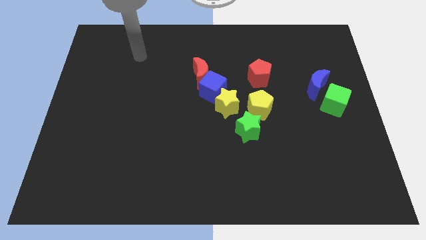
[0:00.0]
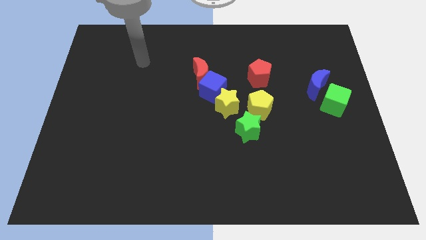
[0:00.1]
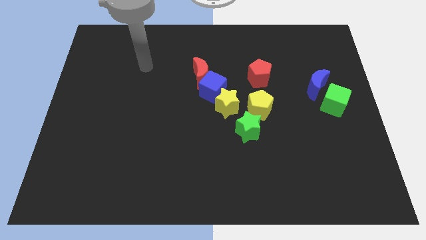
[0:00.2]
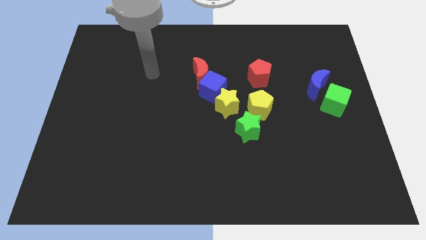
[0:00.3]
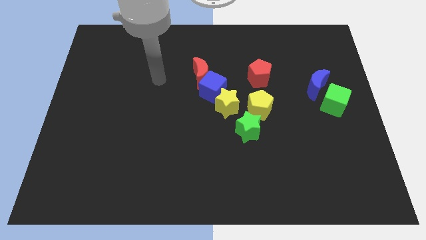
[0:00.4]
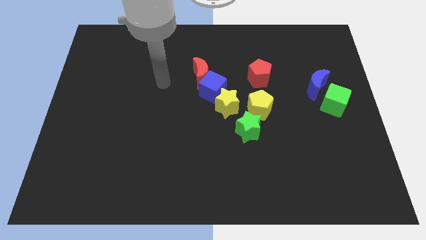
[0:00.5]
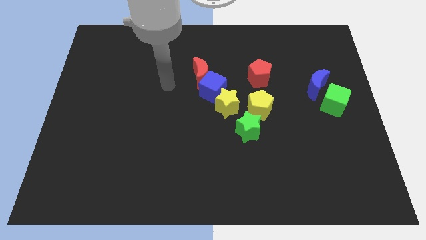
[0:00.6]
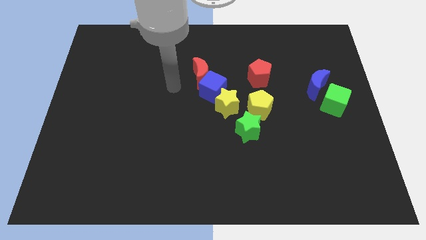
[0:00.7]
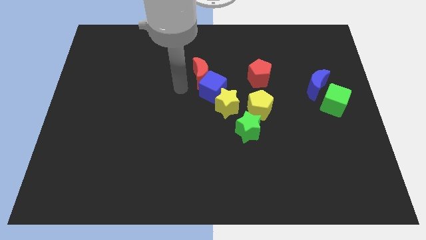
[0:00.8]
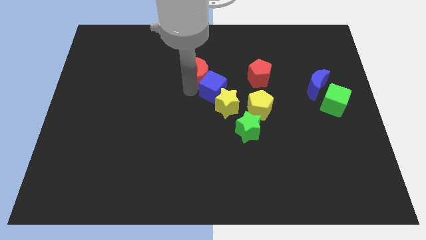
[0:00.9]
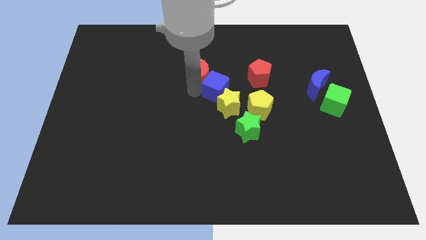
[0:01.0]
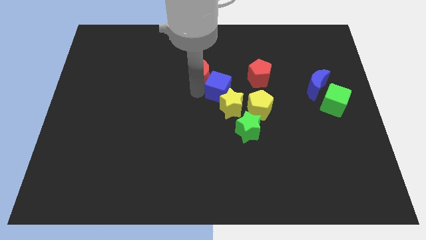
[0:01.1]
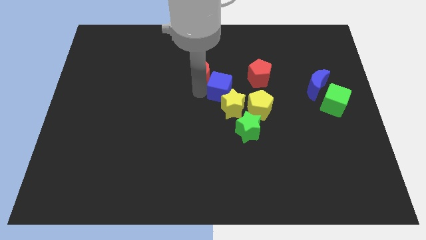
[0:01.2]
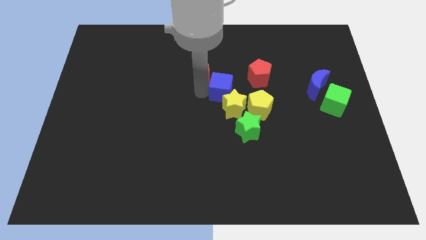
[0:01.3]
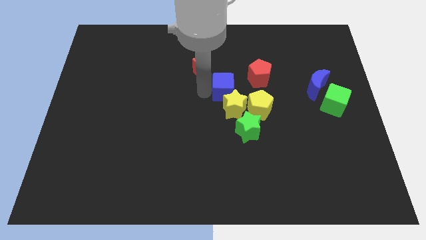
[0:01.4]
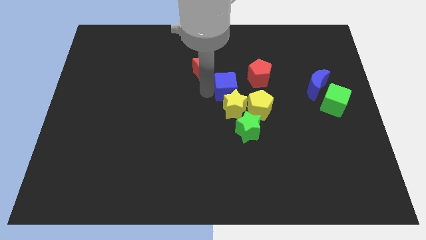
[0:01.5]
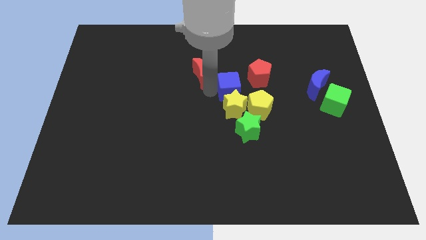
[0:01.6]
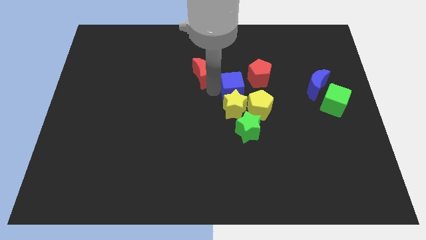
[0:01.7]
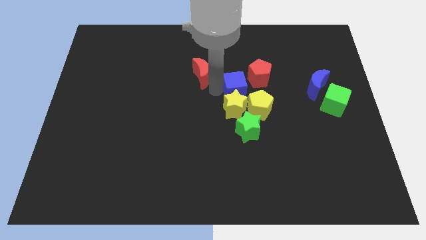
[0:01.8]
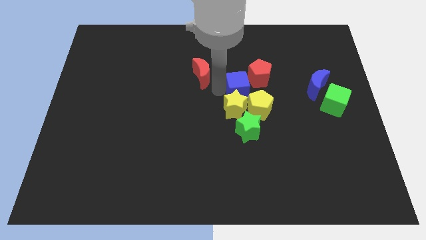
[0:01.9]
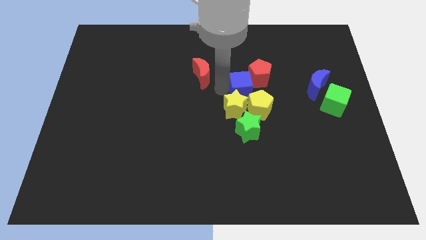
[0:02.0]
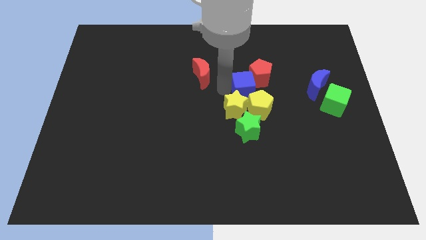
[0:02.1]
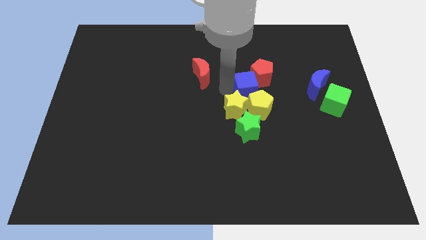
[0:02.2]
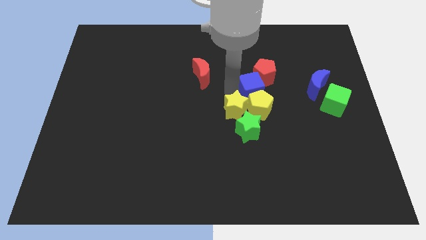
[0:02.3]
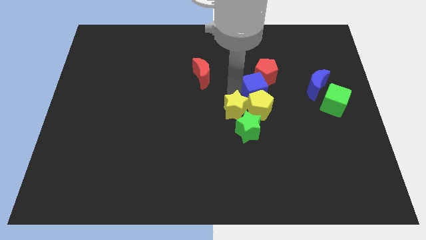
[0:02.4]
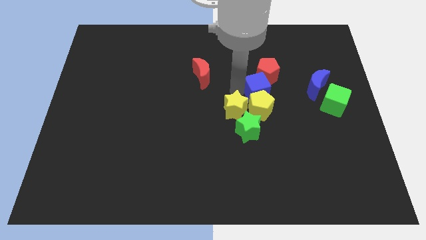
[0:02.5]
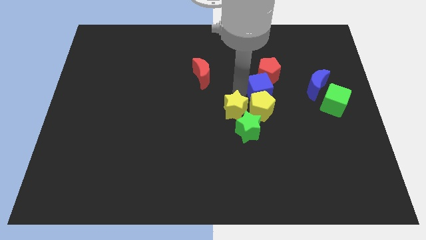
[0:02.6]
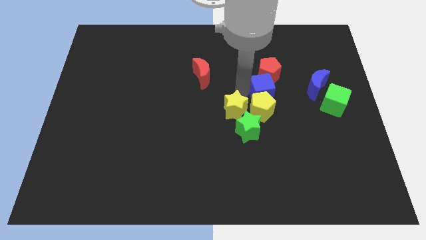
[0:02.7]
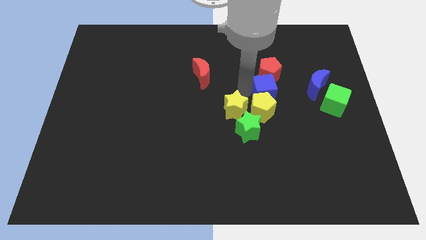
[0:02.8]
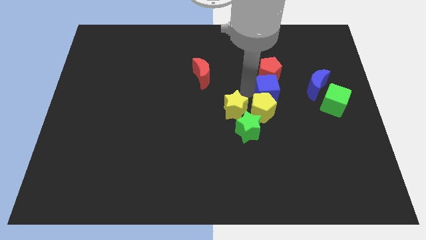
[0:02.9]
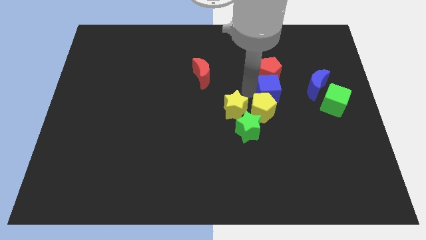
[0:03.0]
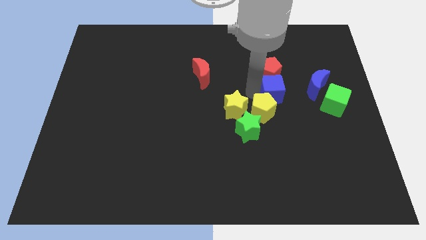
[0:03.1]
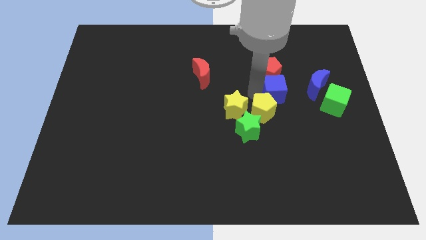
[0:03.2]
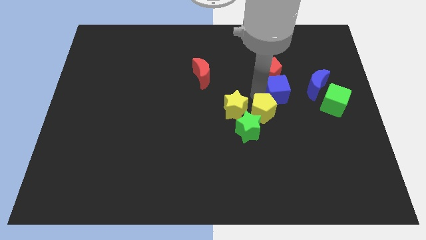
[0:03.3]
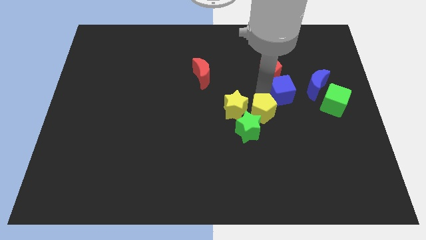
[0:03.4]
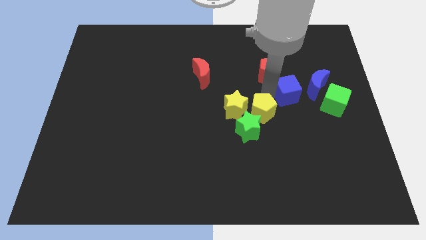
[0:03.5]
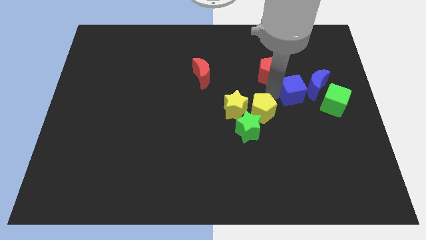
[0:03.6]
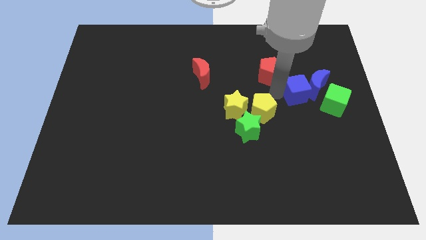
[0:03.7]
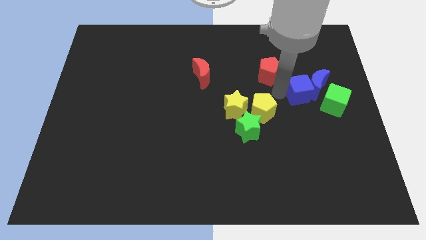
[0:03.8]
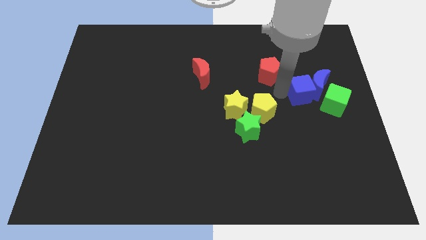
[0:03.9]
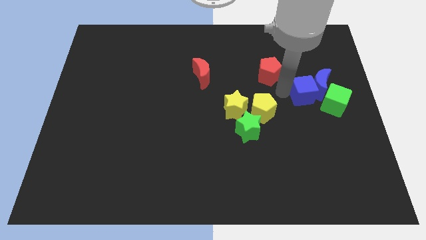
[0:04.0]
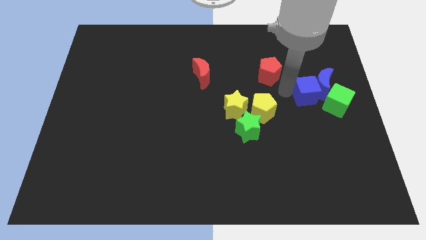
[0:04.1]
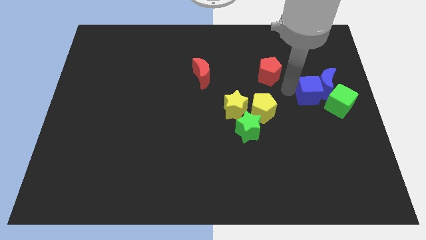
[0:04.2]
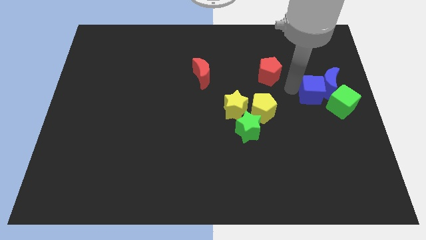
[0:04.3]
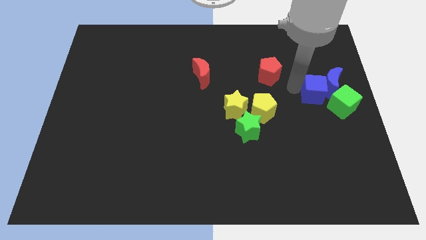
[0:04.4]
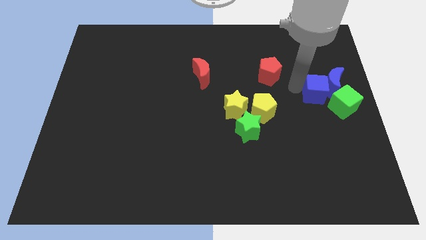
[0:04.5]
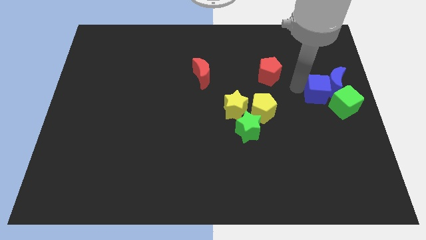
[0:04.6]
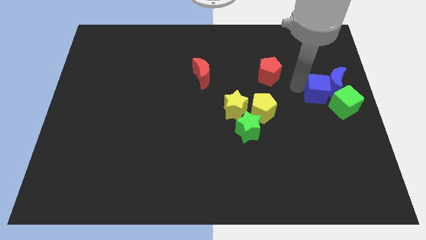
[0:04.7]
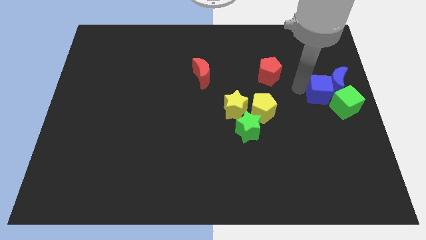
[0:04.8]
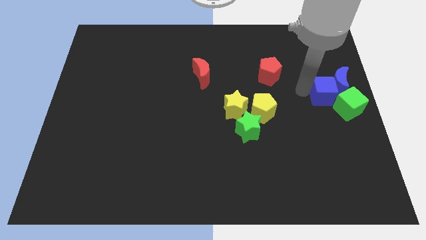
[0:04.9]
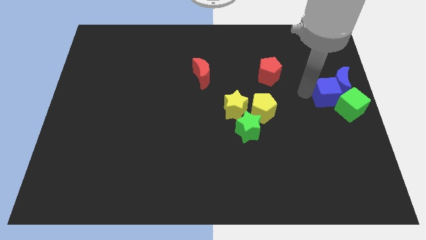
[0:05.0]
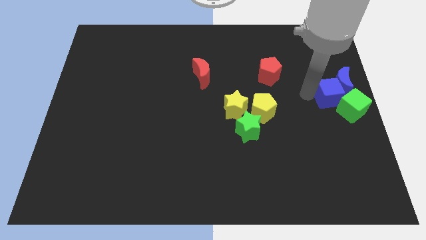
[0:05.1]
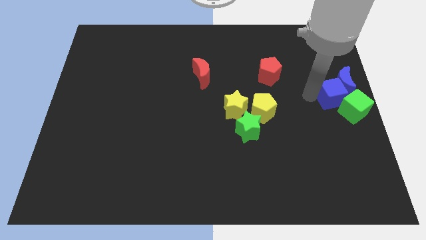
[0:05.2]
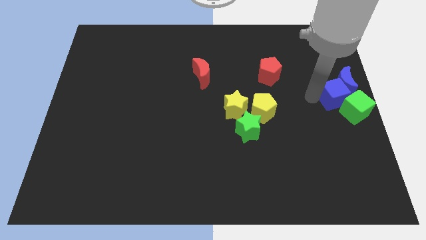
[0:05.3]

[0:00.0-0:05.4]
move the blue cube to the green cube

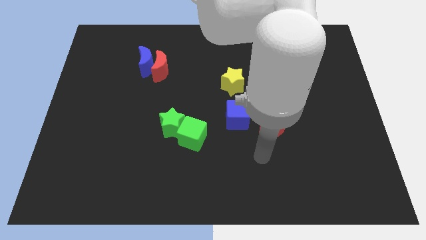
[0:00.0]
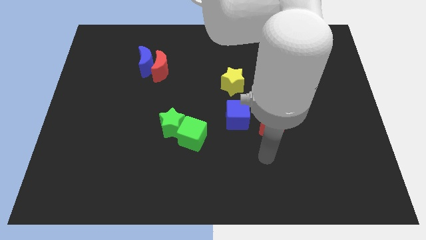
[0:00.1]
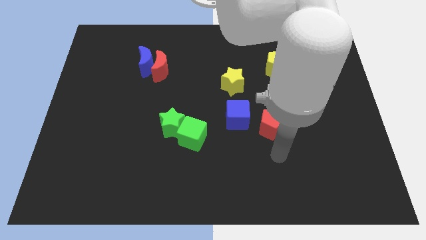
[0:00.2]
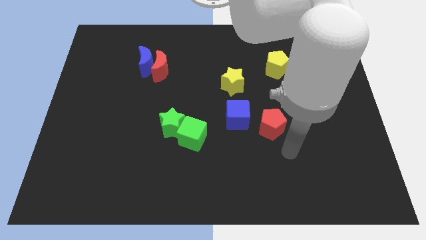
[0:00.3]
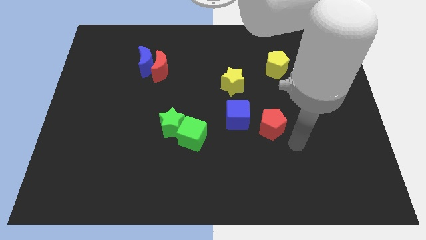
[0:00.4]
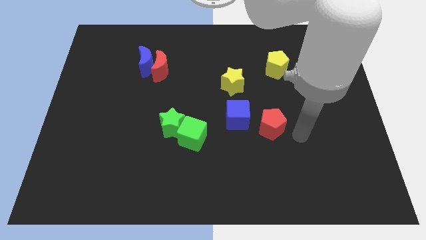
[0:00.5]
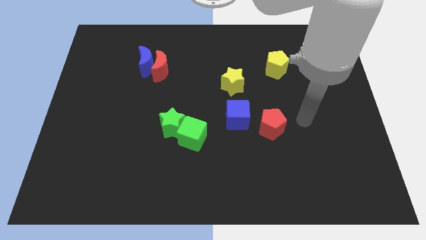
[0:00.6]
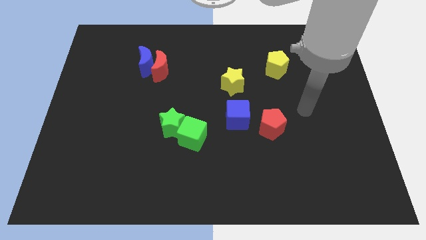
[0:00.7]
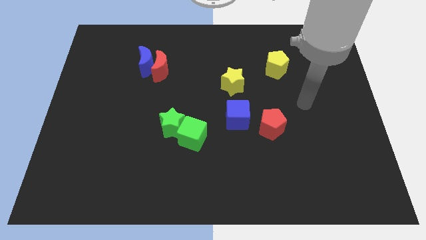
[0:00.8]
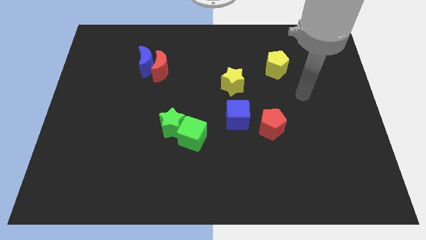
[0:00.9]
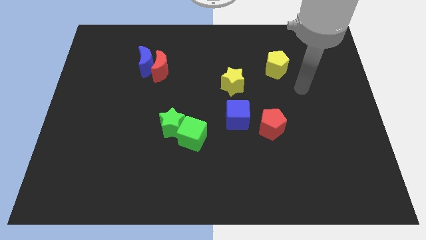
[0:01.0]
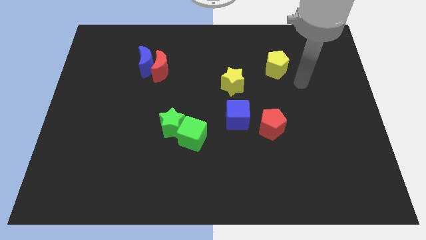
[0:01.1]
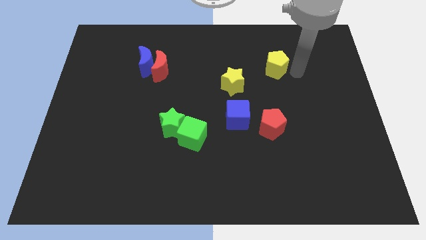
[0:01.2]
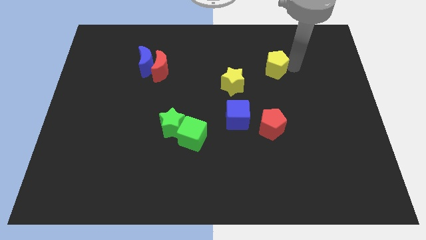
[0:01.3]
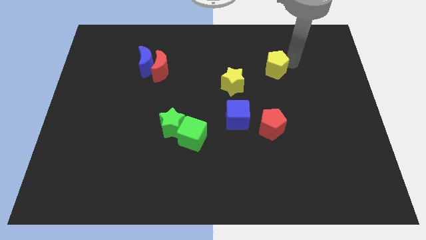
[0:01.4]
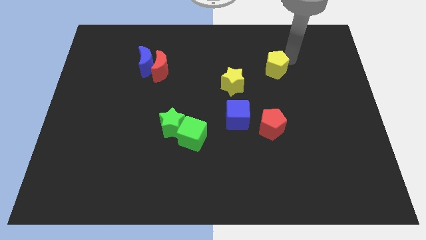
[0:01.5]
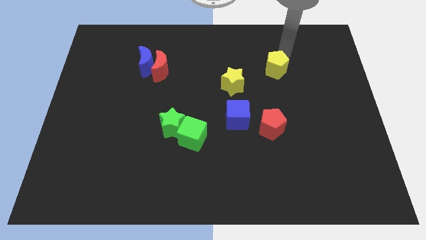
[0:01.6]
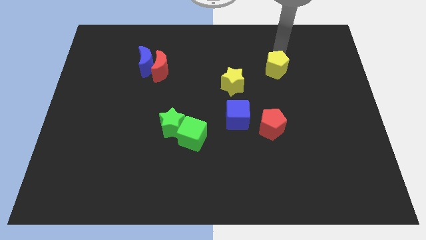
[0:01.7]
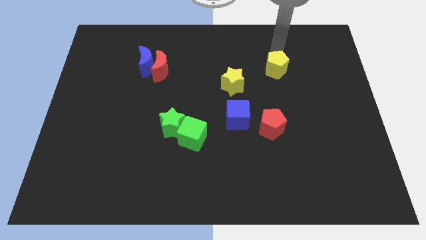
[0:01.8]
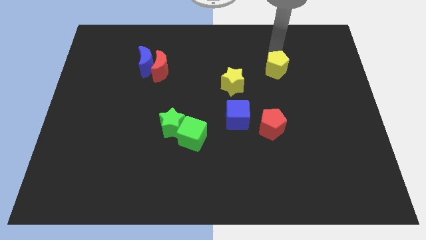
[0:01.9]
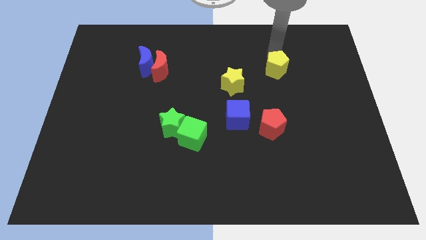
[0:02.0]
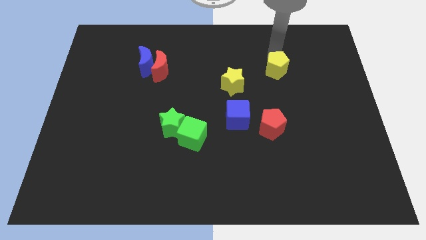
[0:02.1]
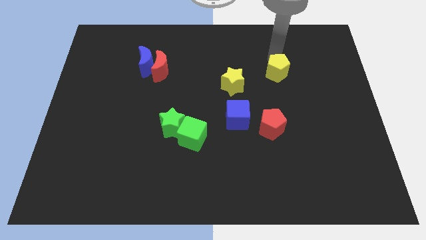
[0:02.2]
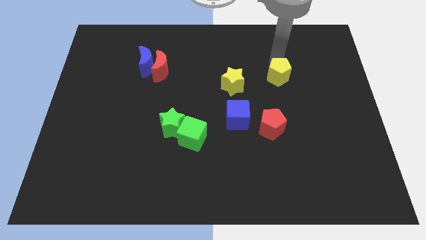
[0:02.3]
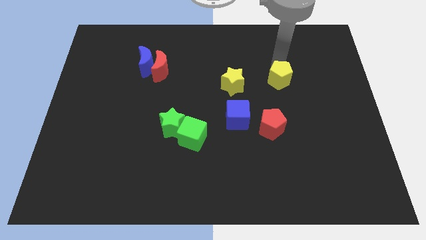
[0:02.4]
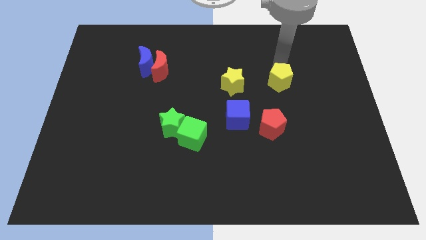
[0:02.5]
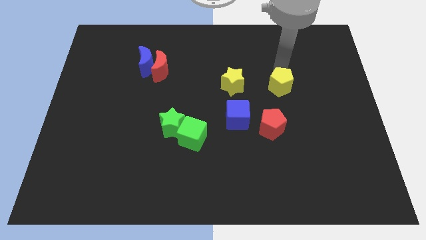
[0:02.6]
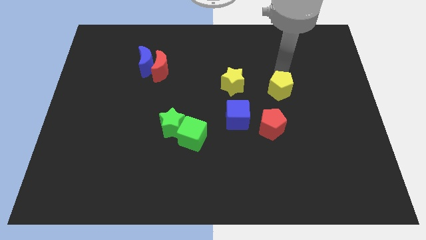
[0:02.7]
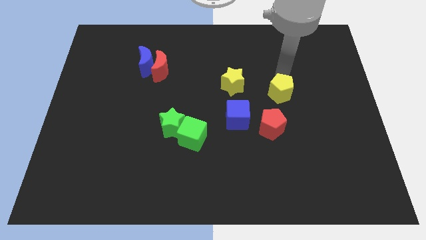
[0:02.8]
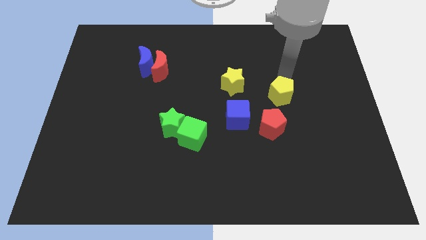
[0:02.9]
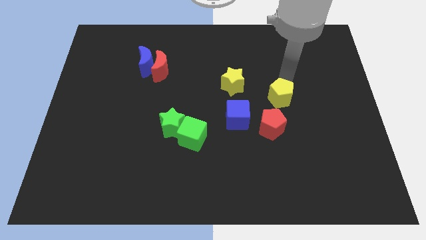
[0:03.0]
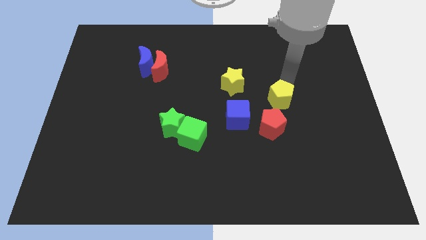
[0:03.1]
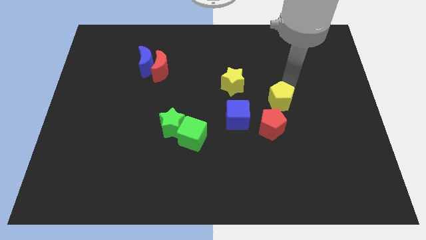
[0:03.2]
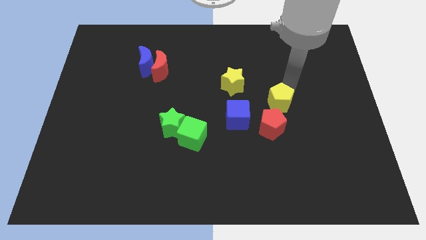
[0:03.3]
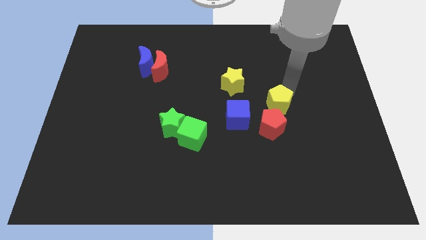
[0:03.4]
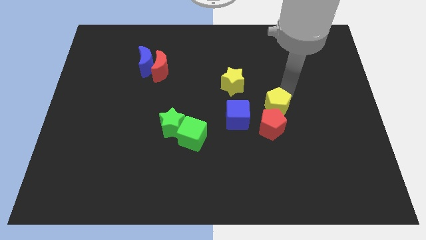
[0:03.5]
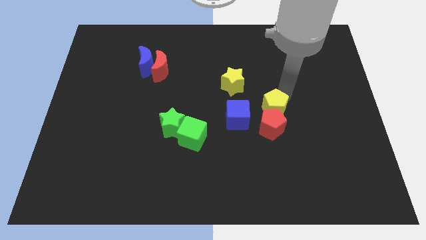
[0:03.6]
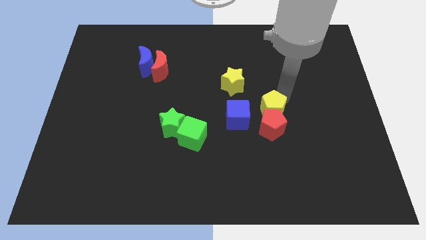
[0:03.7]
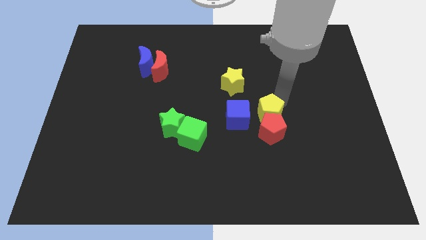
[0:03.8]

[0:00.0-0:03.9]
slide the yellow pentagon close to the red pentagon
